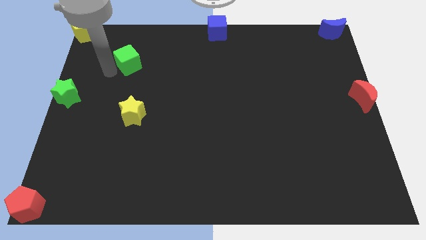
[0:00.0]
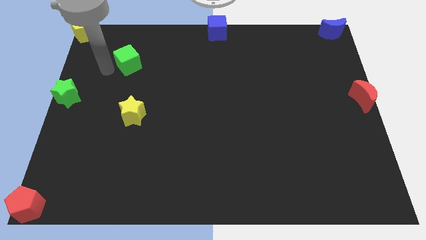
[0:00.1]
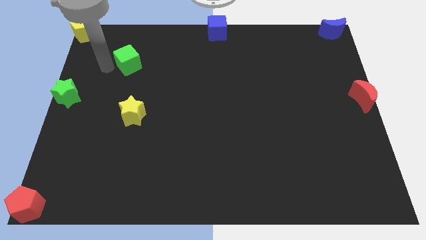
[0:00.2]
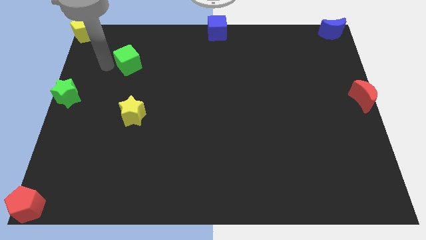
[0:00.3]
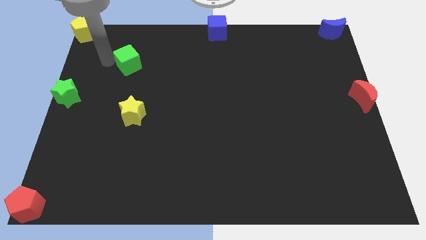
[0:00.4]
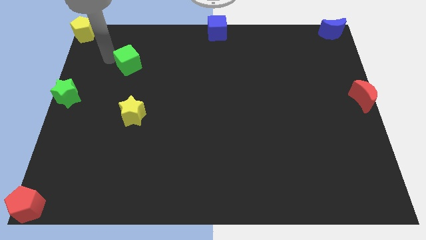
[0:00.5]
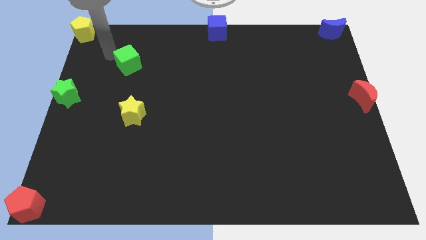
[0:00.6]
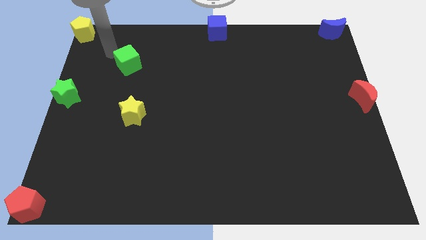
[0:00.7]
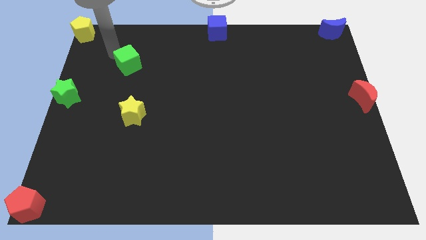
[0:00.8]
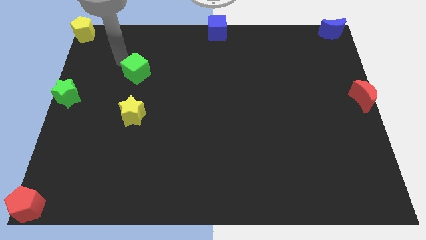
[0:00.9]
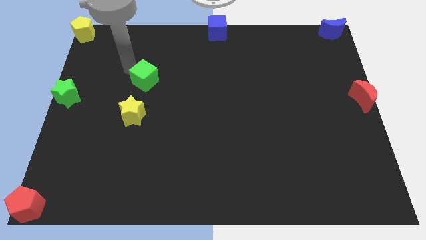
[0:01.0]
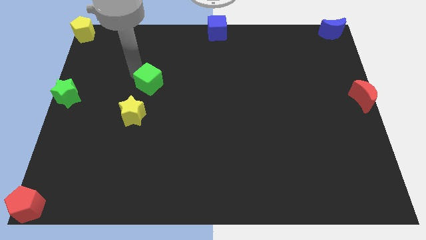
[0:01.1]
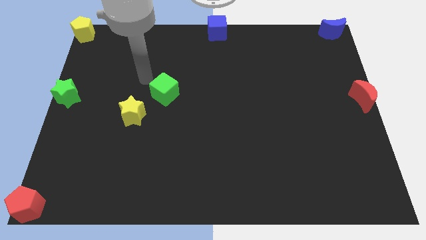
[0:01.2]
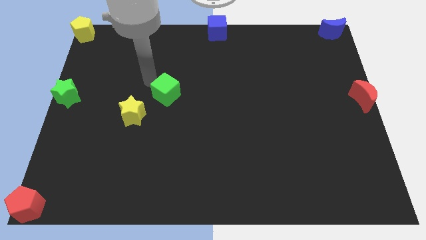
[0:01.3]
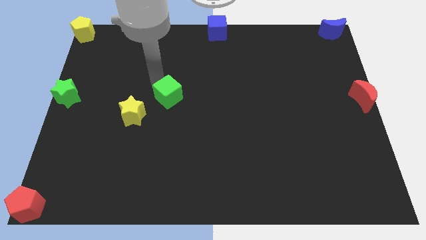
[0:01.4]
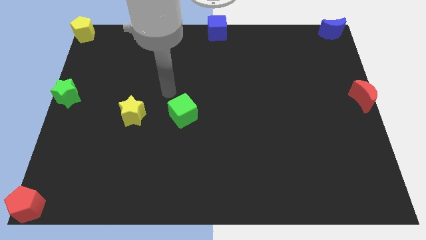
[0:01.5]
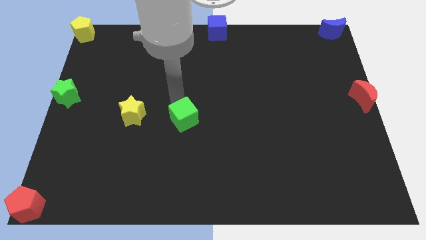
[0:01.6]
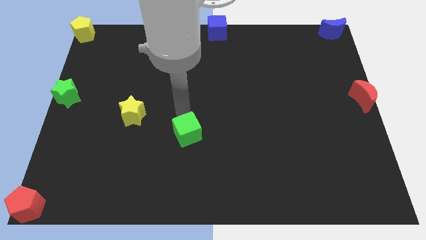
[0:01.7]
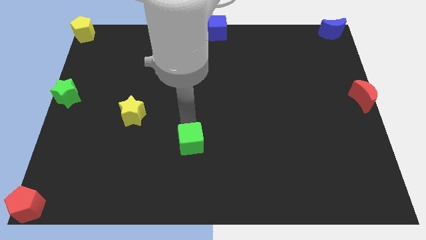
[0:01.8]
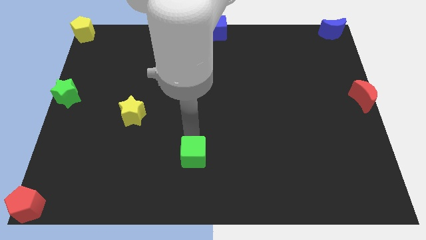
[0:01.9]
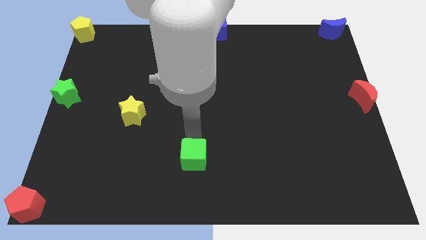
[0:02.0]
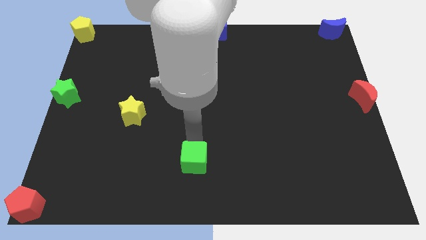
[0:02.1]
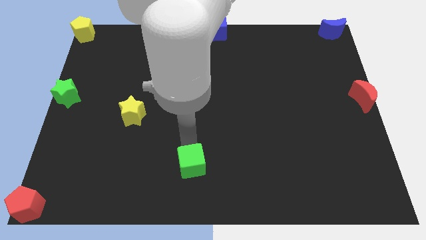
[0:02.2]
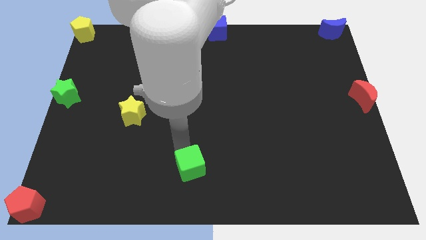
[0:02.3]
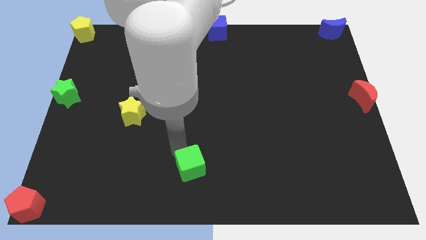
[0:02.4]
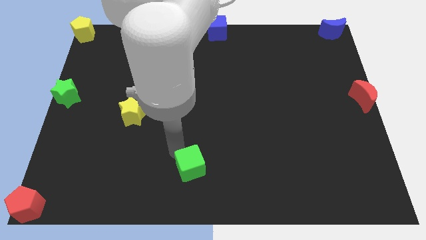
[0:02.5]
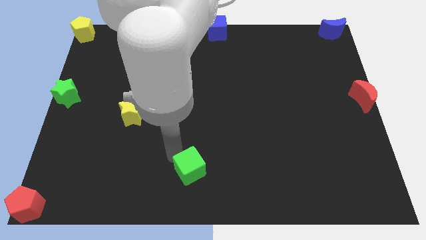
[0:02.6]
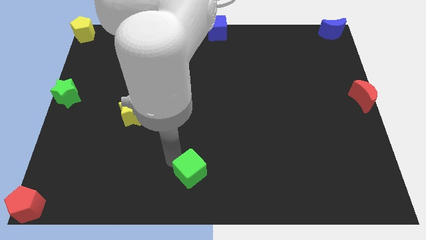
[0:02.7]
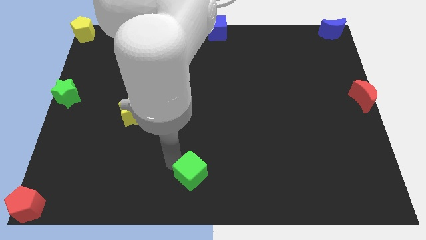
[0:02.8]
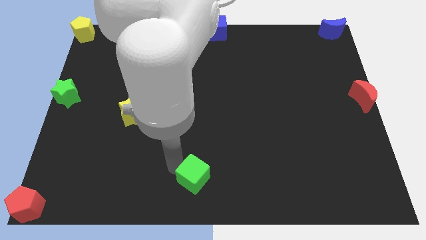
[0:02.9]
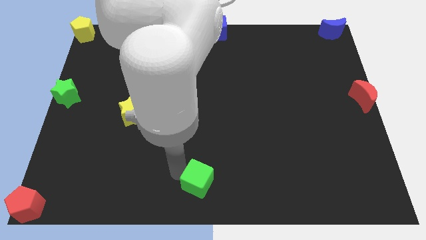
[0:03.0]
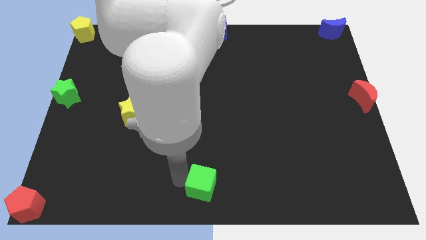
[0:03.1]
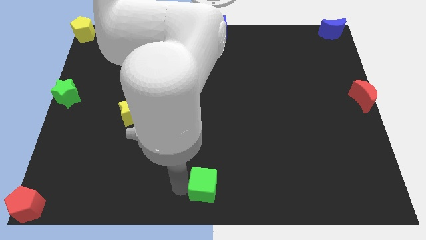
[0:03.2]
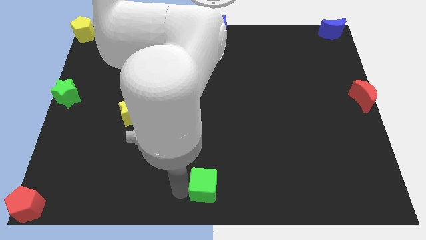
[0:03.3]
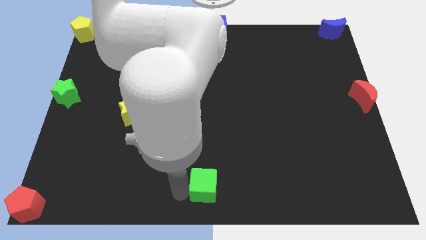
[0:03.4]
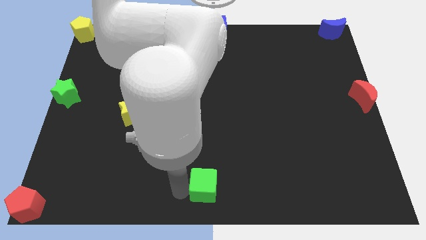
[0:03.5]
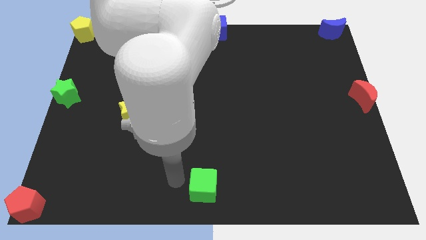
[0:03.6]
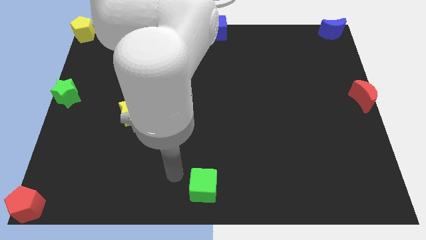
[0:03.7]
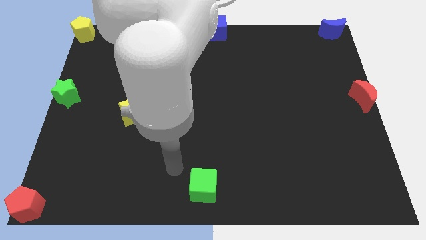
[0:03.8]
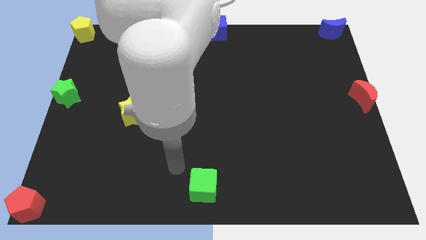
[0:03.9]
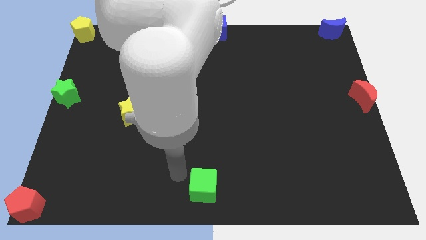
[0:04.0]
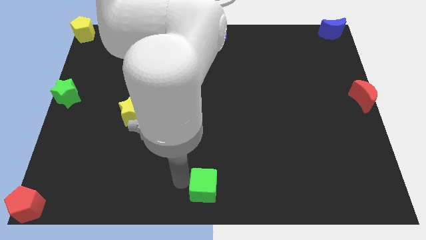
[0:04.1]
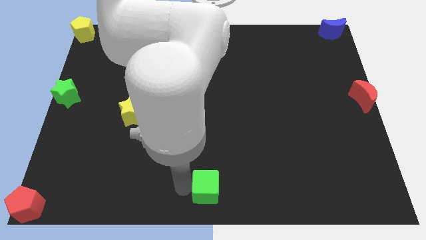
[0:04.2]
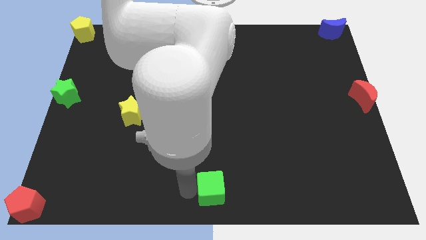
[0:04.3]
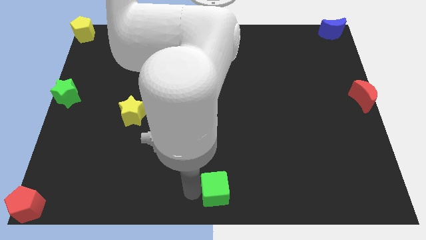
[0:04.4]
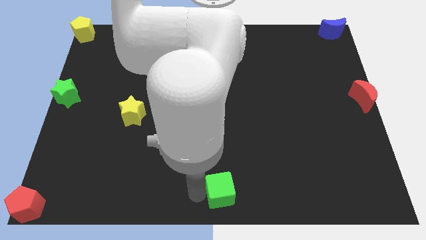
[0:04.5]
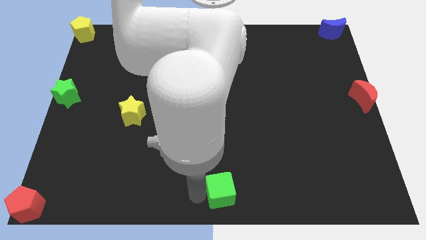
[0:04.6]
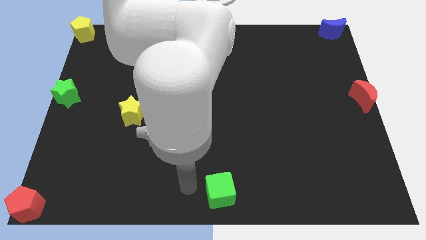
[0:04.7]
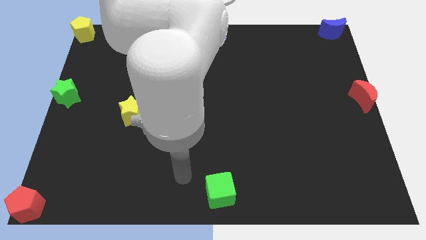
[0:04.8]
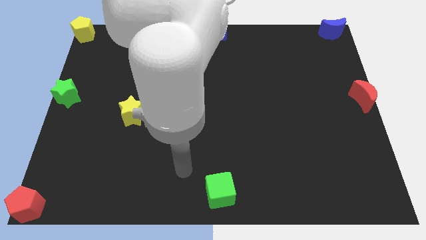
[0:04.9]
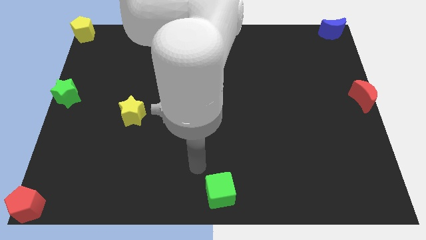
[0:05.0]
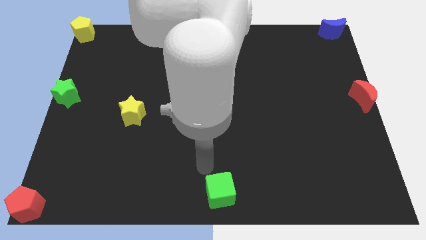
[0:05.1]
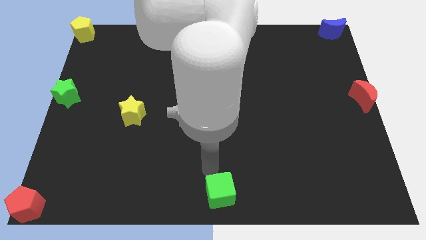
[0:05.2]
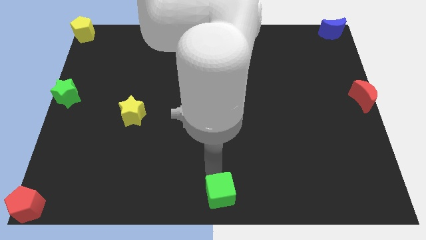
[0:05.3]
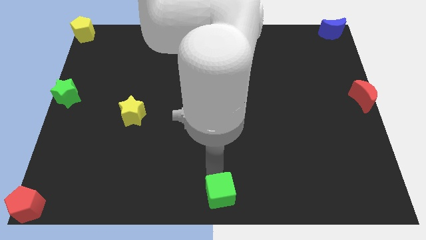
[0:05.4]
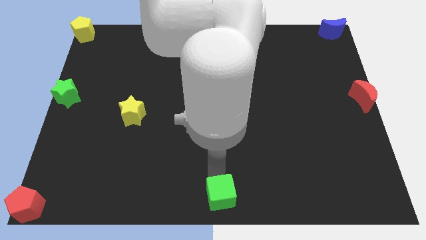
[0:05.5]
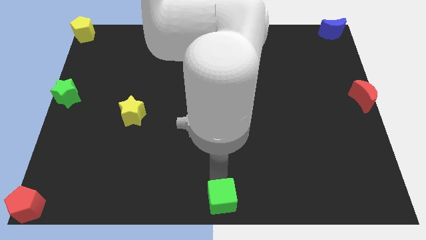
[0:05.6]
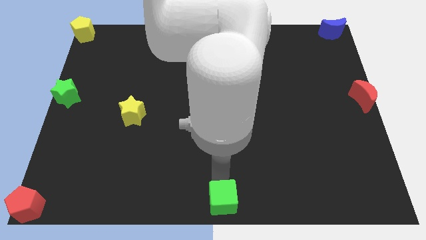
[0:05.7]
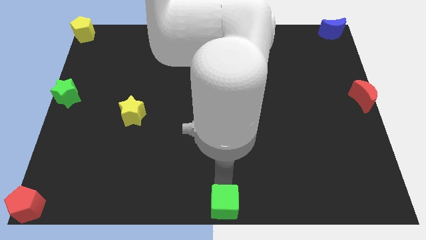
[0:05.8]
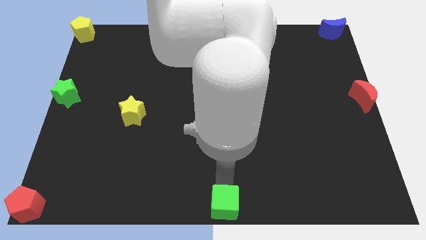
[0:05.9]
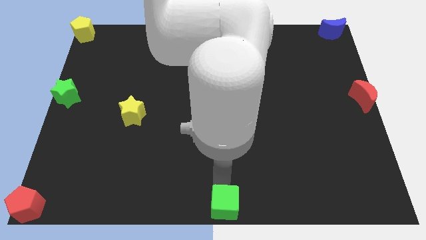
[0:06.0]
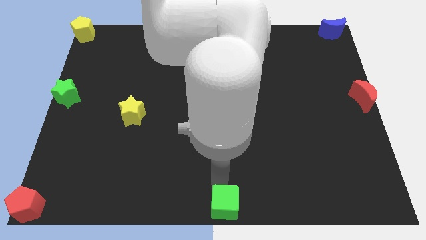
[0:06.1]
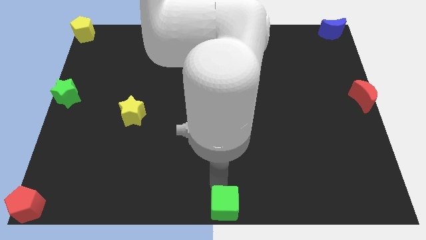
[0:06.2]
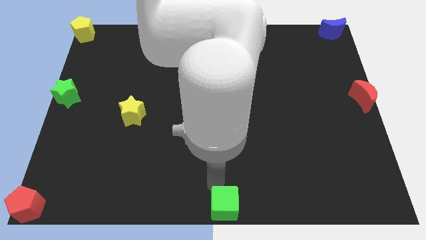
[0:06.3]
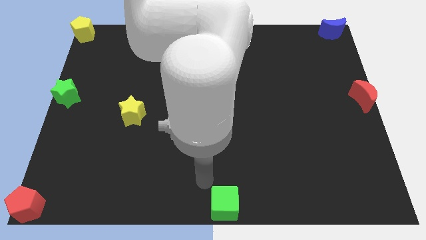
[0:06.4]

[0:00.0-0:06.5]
place green cube on the bottom center of the board

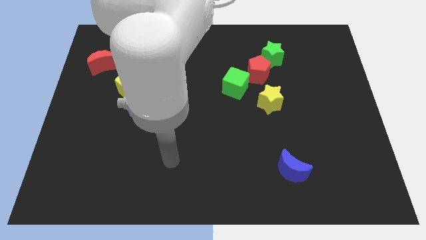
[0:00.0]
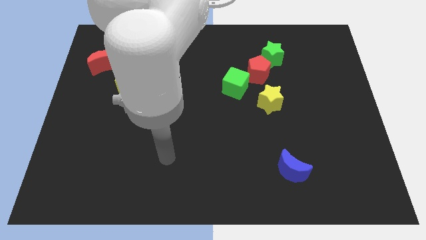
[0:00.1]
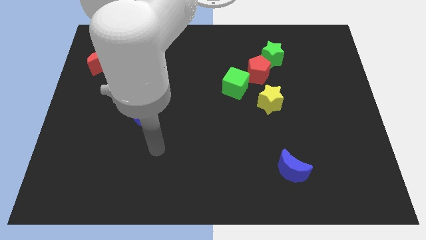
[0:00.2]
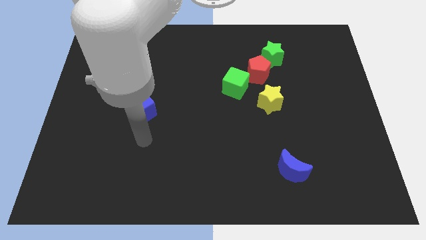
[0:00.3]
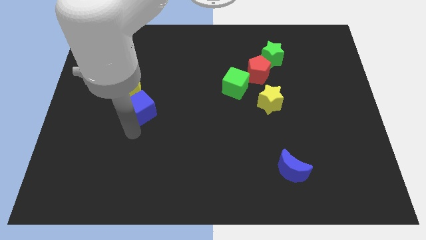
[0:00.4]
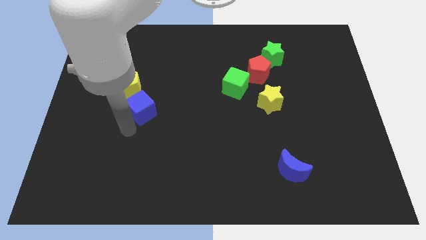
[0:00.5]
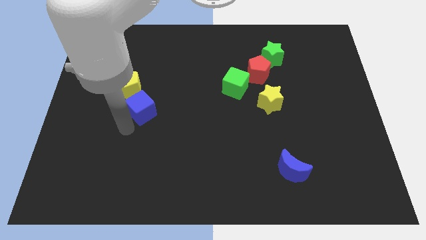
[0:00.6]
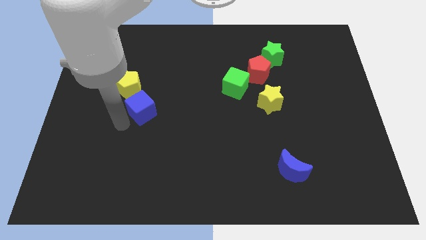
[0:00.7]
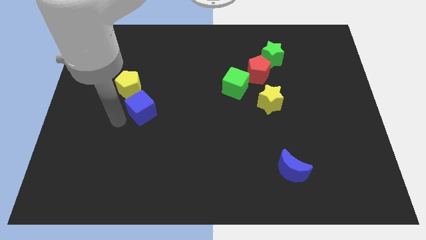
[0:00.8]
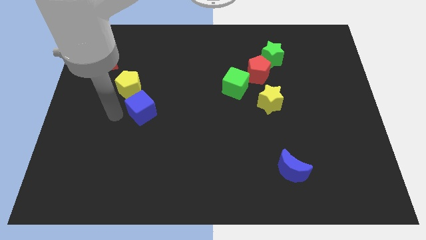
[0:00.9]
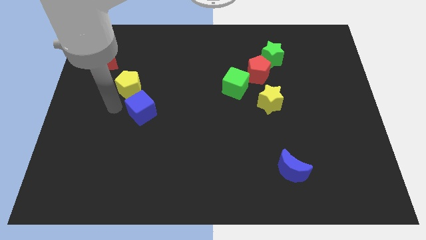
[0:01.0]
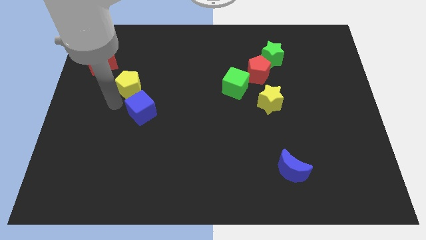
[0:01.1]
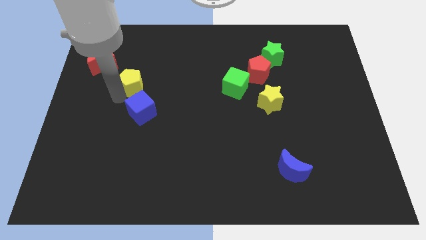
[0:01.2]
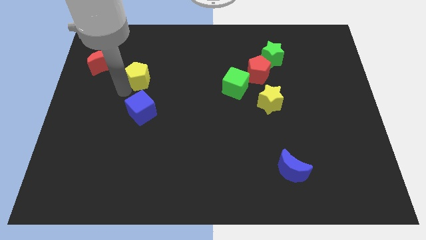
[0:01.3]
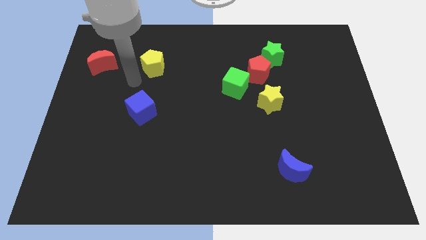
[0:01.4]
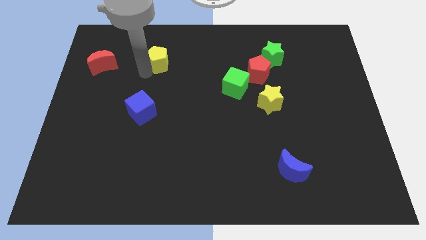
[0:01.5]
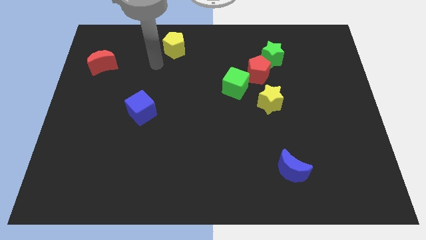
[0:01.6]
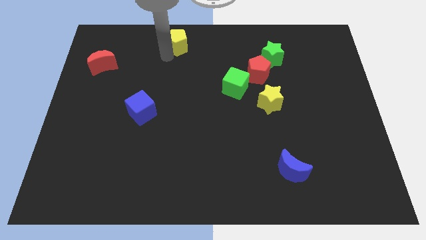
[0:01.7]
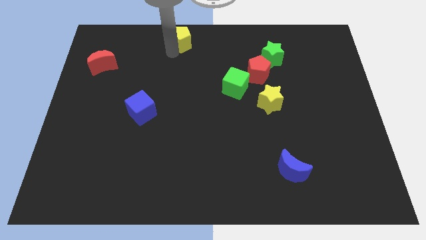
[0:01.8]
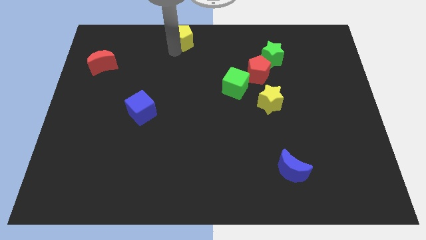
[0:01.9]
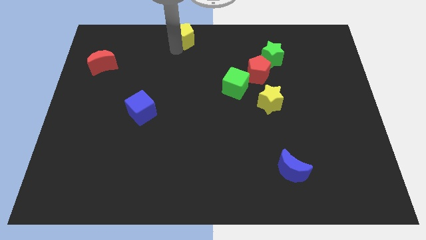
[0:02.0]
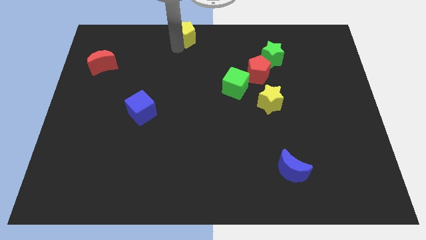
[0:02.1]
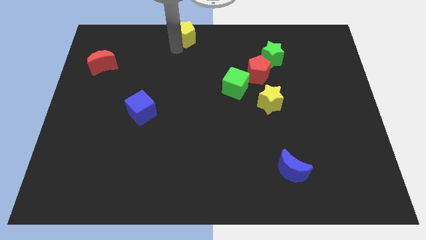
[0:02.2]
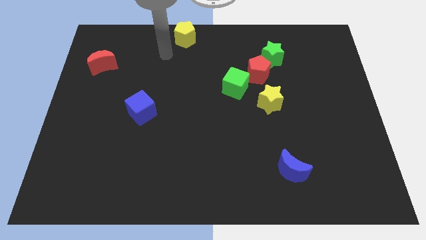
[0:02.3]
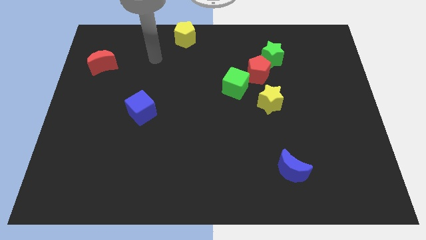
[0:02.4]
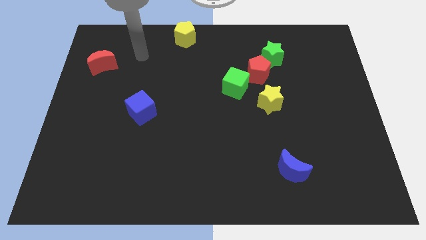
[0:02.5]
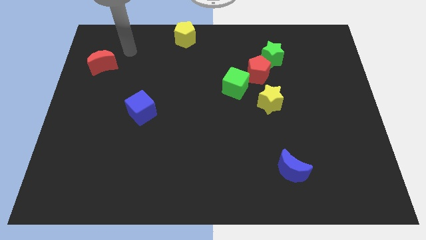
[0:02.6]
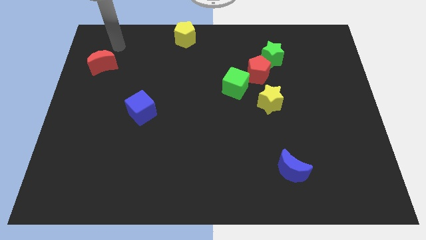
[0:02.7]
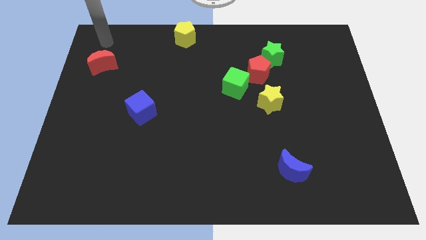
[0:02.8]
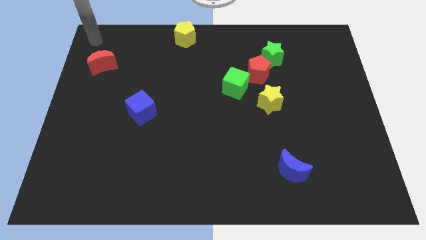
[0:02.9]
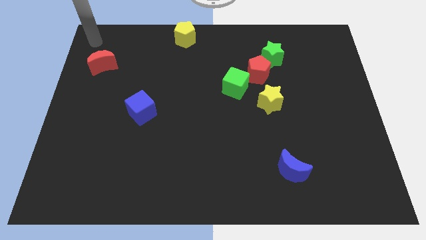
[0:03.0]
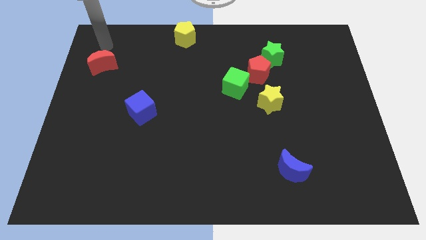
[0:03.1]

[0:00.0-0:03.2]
push yellow pentagon to the top
